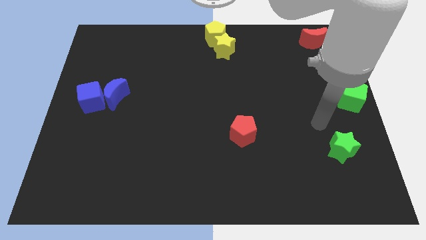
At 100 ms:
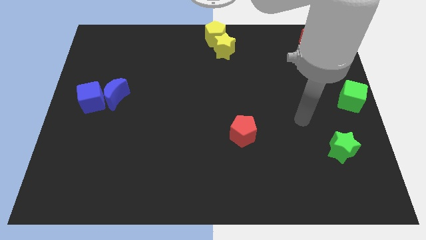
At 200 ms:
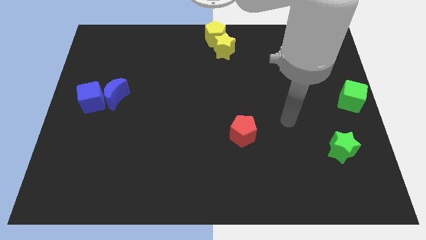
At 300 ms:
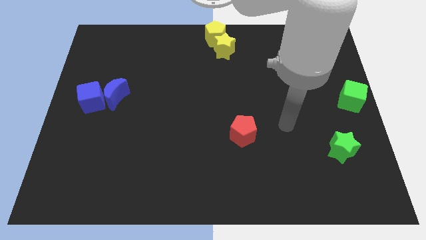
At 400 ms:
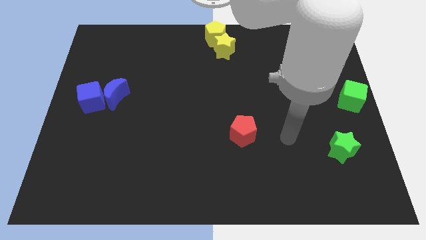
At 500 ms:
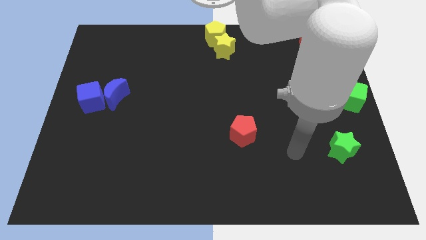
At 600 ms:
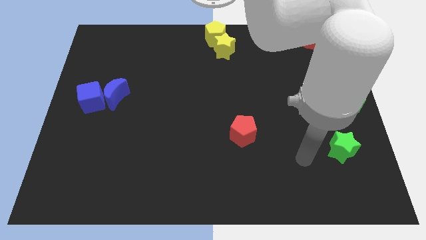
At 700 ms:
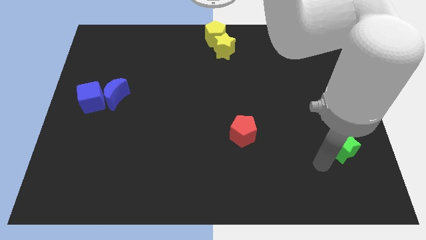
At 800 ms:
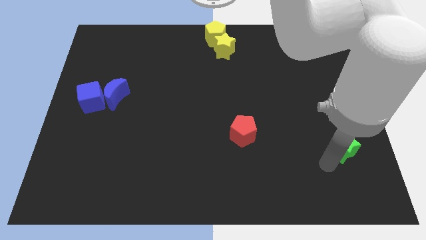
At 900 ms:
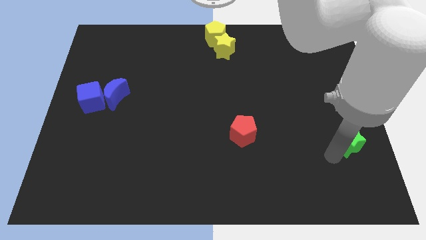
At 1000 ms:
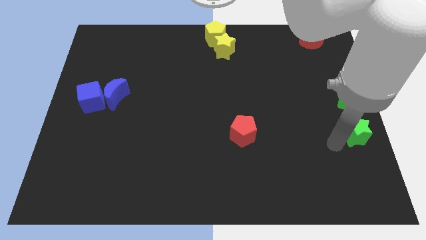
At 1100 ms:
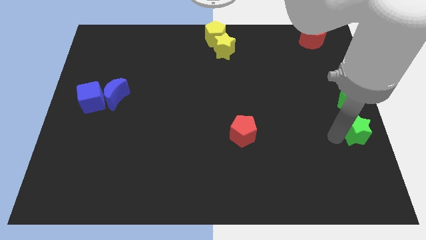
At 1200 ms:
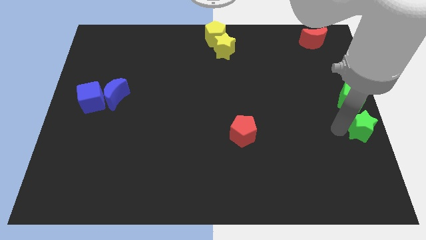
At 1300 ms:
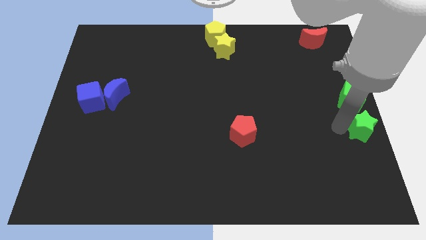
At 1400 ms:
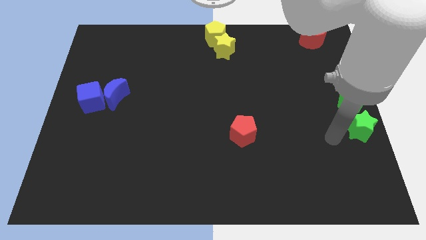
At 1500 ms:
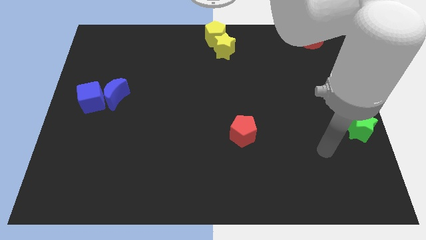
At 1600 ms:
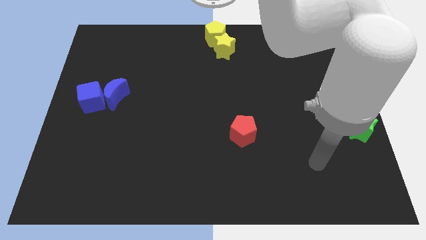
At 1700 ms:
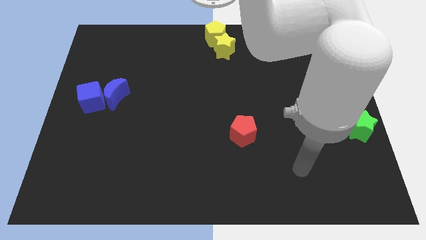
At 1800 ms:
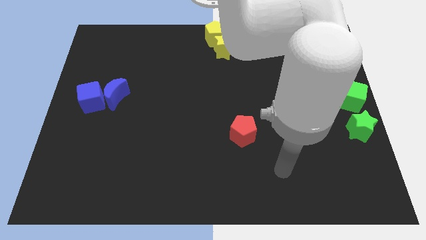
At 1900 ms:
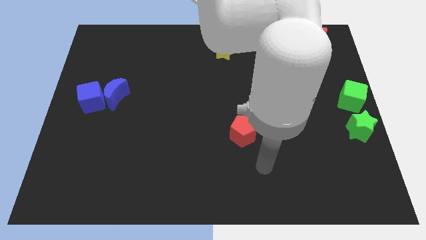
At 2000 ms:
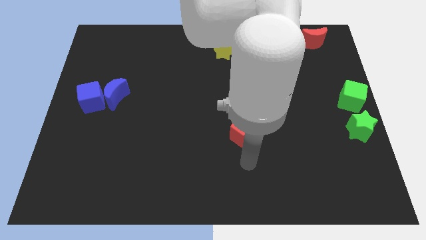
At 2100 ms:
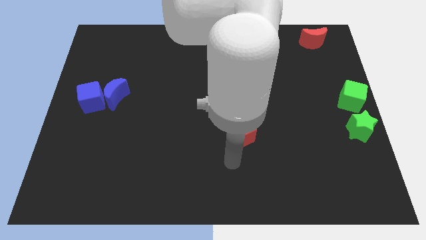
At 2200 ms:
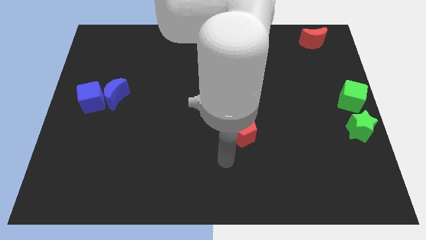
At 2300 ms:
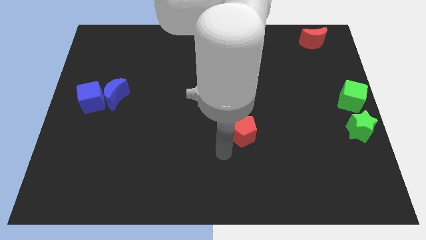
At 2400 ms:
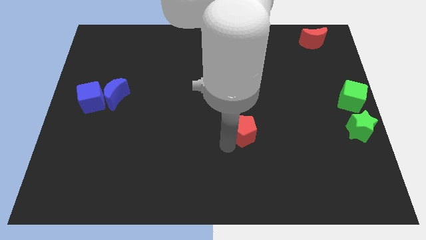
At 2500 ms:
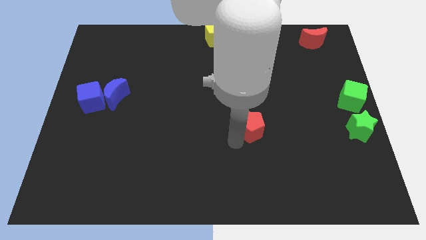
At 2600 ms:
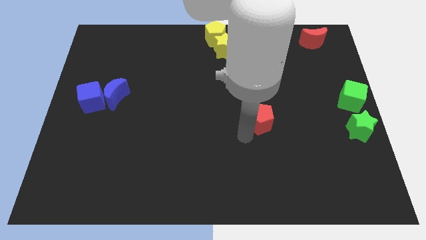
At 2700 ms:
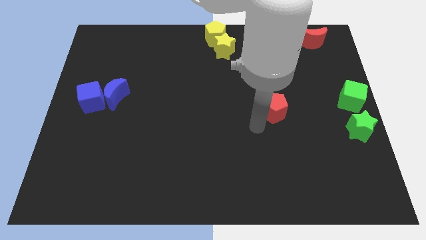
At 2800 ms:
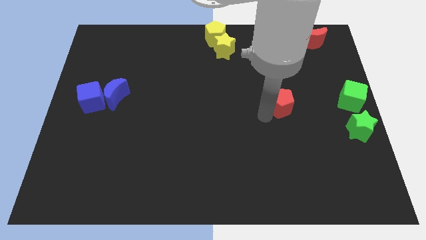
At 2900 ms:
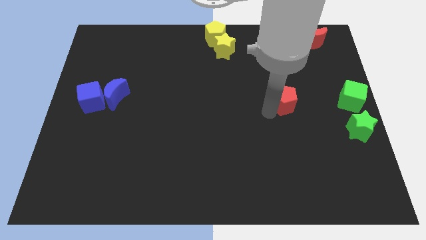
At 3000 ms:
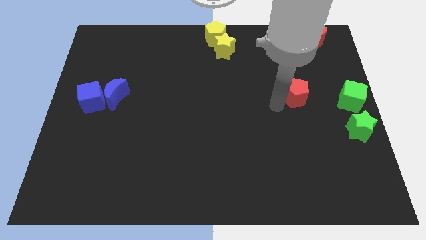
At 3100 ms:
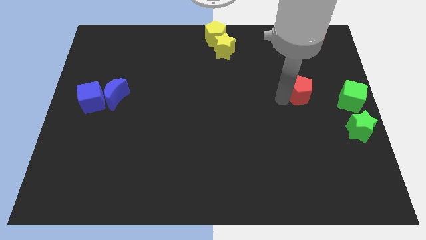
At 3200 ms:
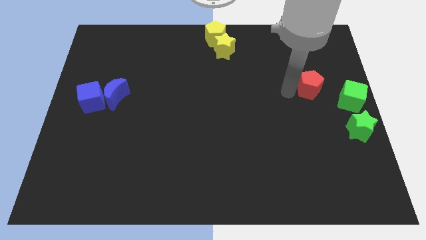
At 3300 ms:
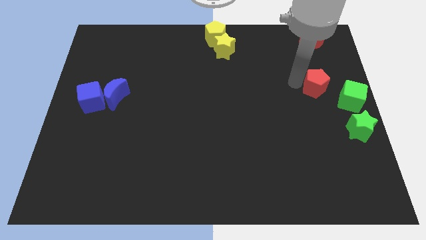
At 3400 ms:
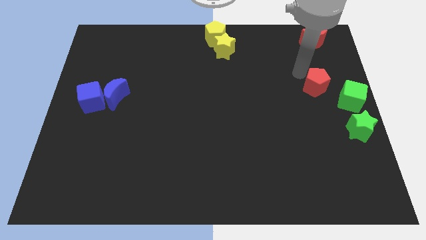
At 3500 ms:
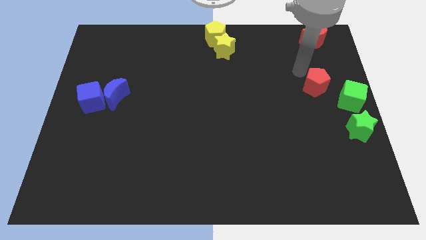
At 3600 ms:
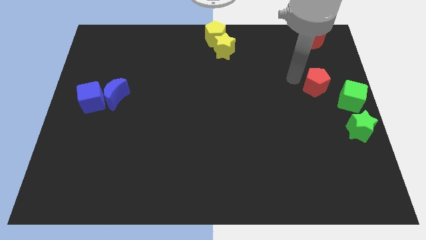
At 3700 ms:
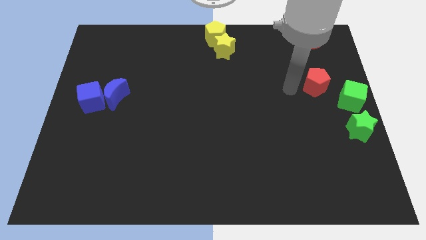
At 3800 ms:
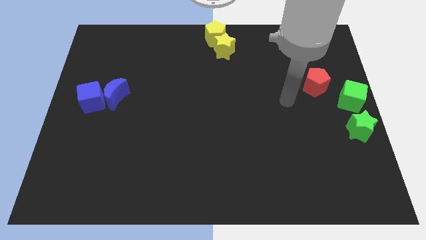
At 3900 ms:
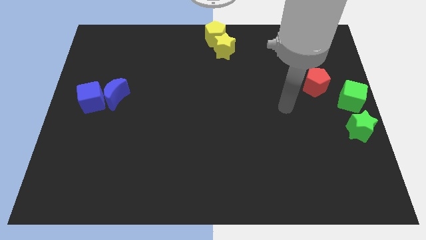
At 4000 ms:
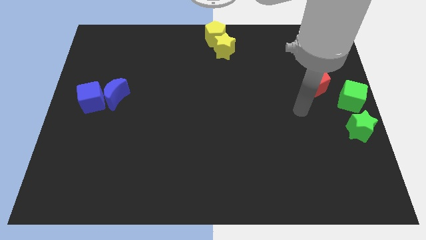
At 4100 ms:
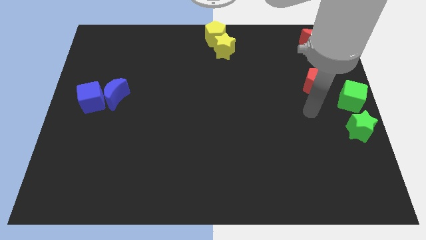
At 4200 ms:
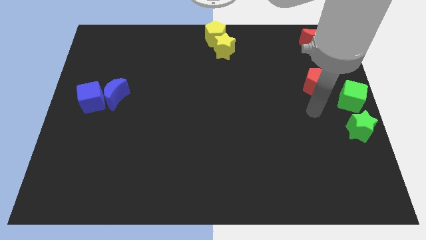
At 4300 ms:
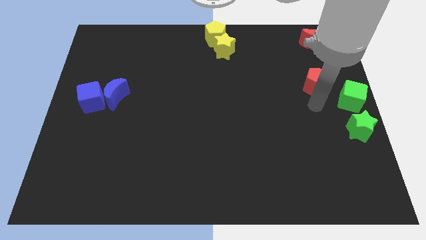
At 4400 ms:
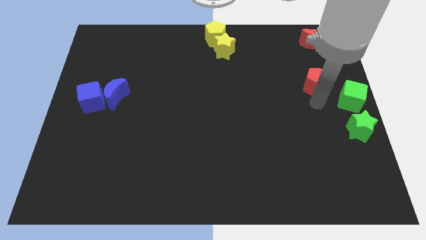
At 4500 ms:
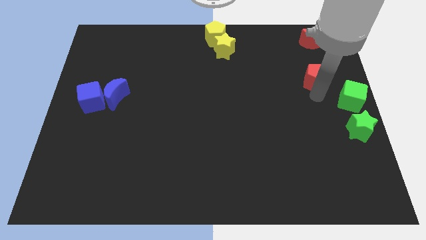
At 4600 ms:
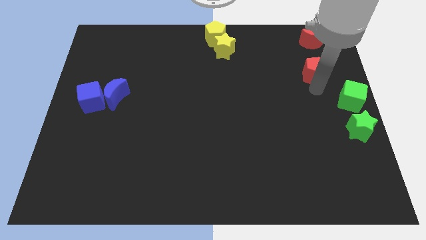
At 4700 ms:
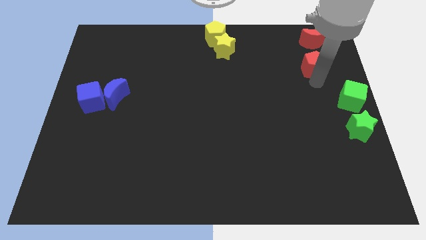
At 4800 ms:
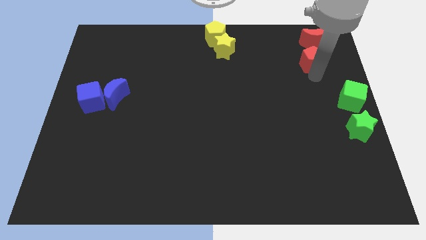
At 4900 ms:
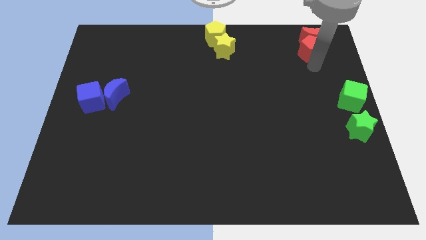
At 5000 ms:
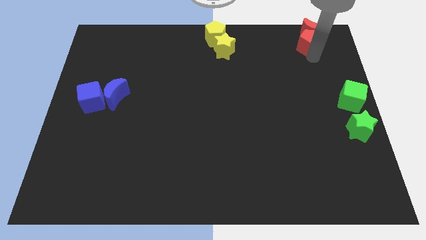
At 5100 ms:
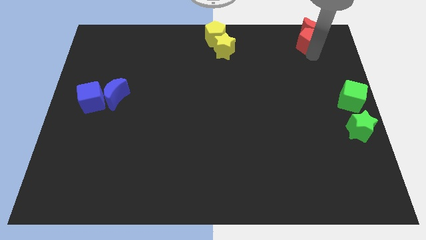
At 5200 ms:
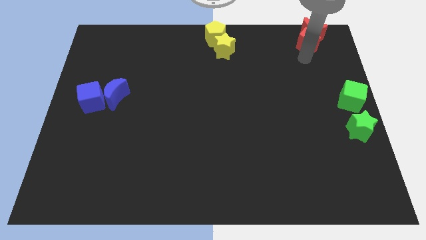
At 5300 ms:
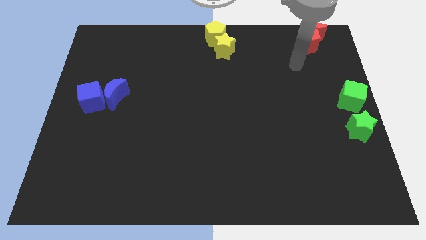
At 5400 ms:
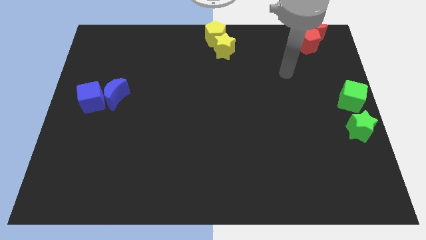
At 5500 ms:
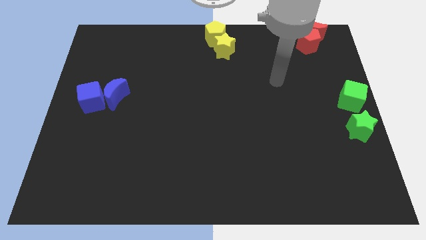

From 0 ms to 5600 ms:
move the red pentagon to the red moon

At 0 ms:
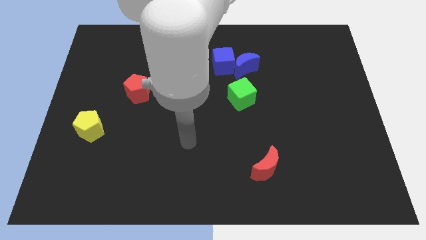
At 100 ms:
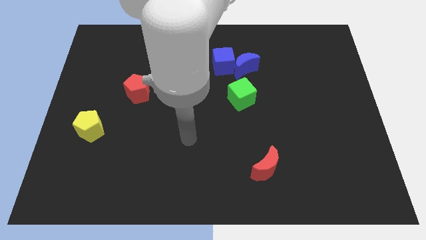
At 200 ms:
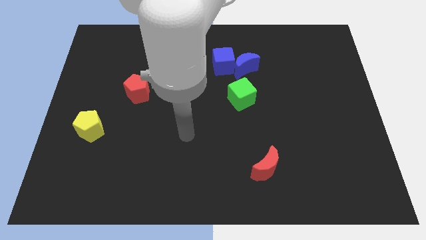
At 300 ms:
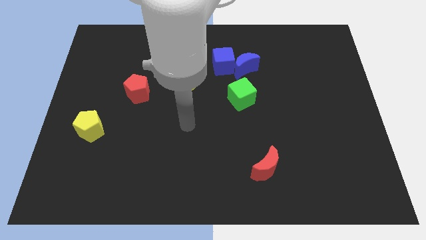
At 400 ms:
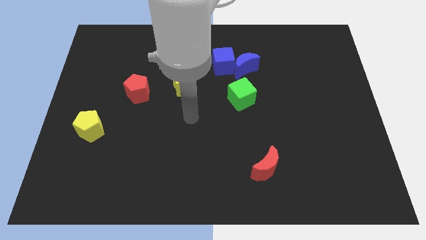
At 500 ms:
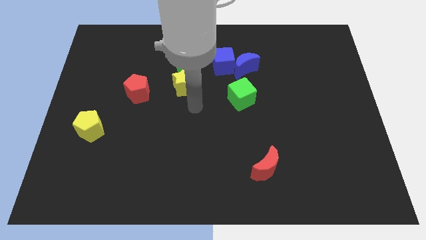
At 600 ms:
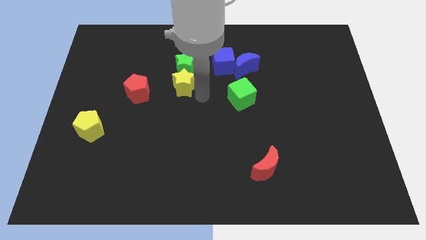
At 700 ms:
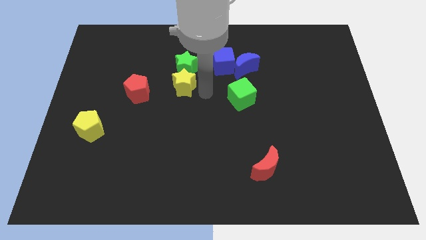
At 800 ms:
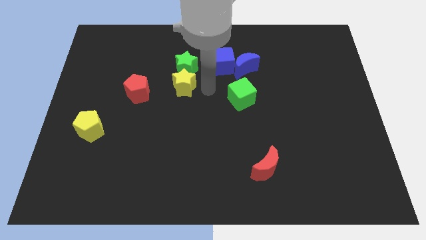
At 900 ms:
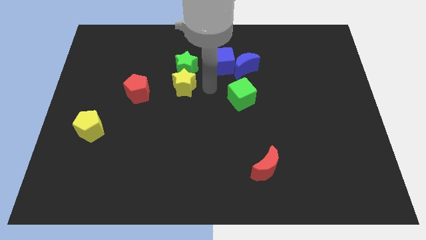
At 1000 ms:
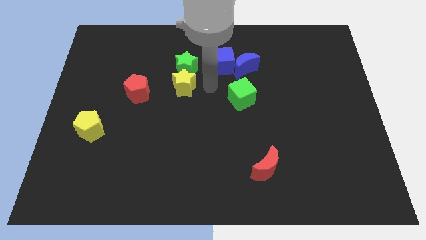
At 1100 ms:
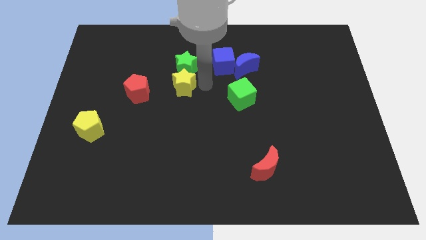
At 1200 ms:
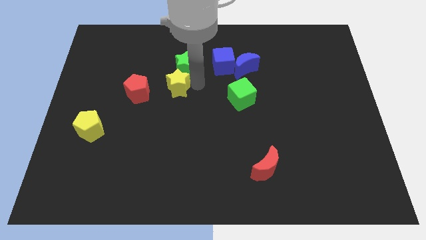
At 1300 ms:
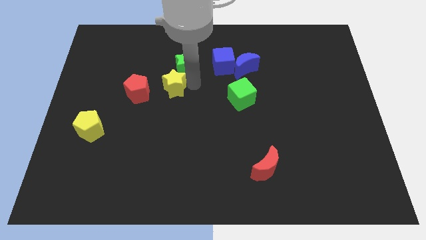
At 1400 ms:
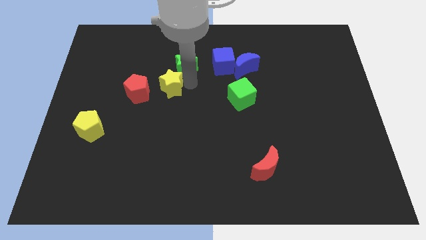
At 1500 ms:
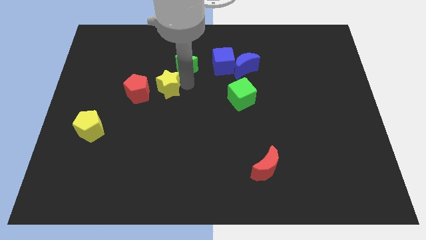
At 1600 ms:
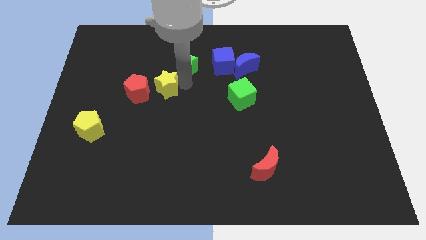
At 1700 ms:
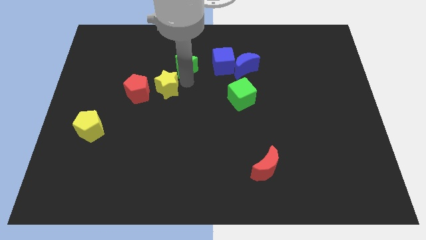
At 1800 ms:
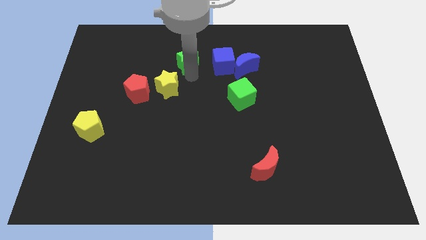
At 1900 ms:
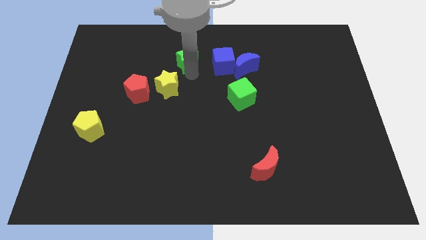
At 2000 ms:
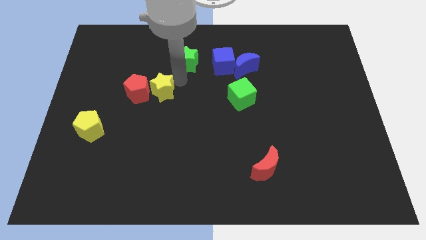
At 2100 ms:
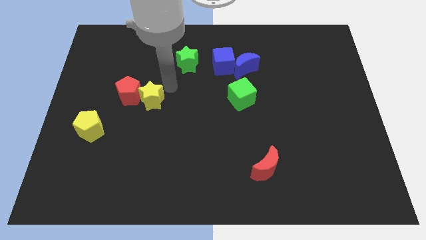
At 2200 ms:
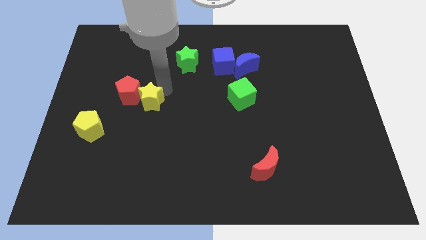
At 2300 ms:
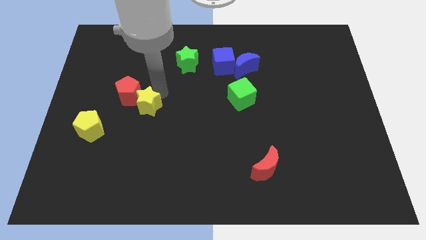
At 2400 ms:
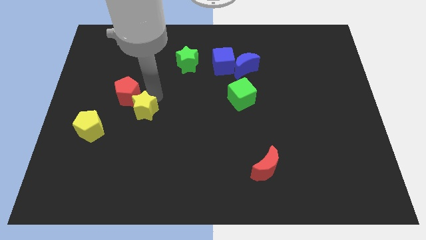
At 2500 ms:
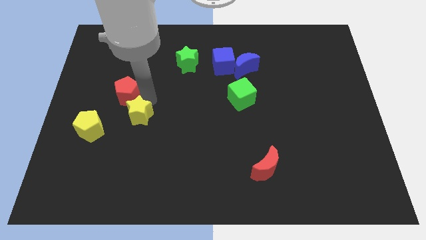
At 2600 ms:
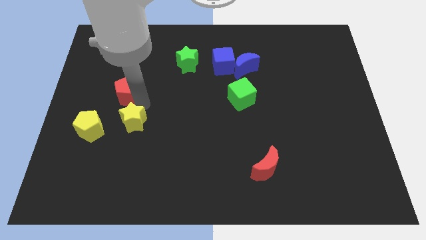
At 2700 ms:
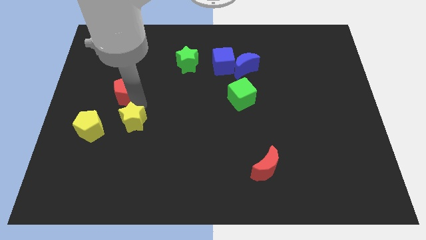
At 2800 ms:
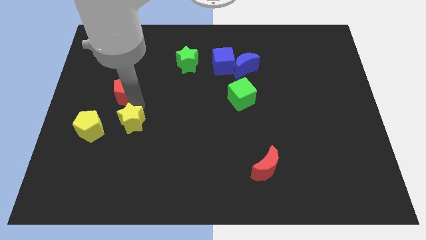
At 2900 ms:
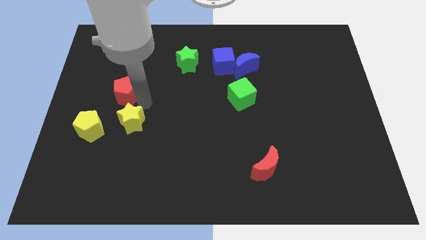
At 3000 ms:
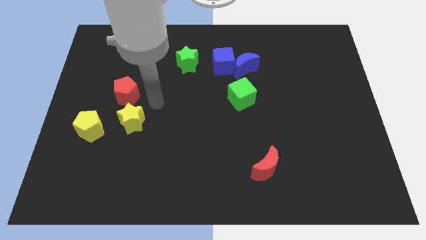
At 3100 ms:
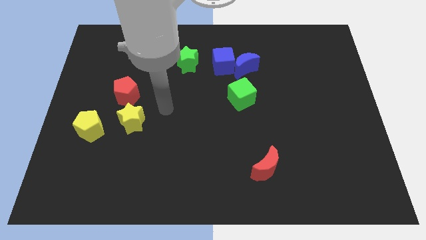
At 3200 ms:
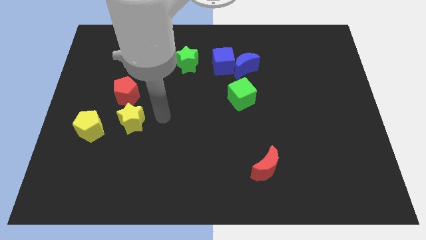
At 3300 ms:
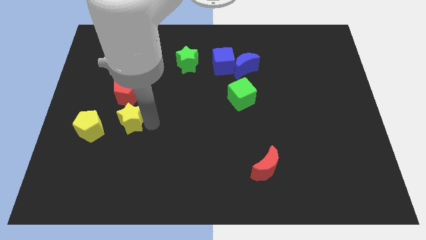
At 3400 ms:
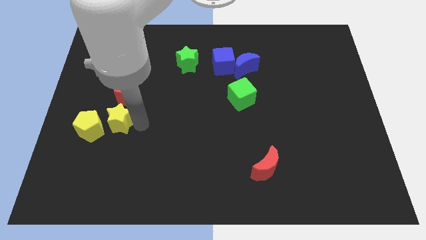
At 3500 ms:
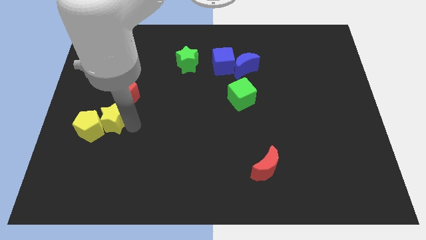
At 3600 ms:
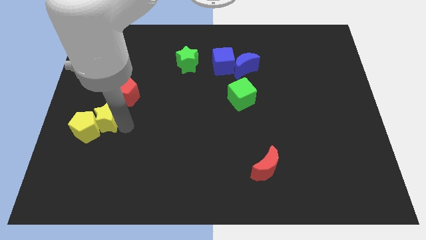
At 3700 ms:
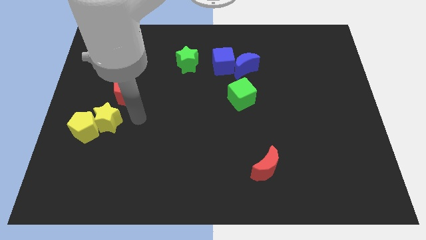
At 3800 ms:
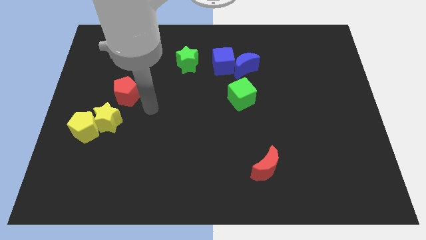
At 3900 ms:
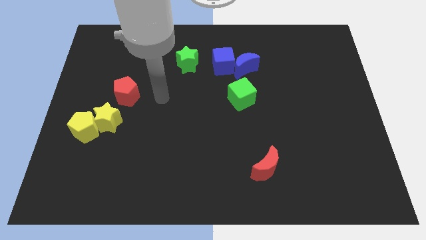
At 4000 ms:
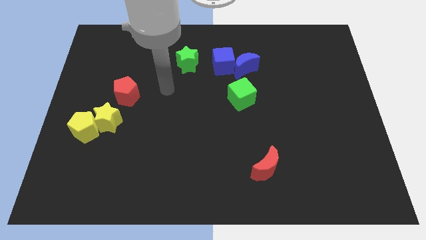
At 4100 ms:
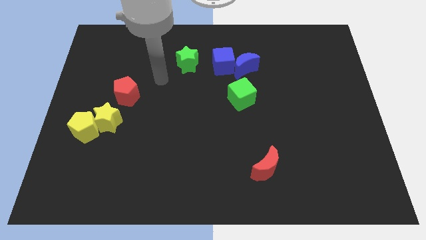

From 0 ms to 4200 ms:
place the yellow star in between the red pentagon and yellow pentagon
